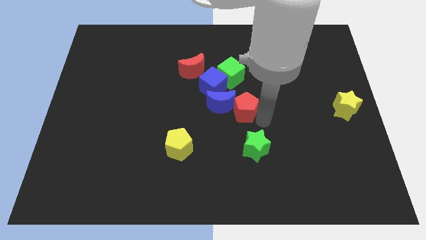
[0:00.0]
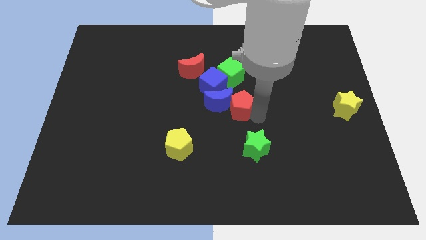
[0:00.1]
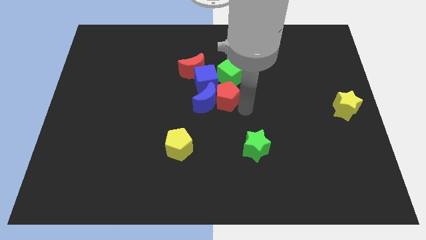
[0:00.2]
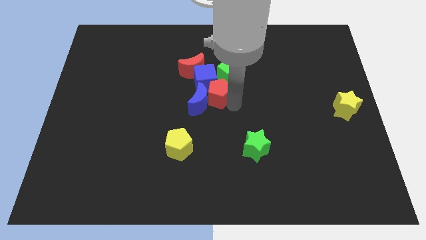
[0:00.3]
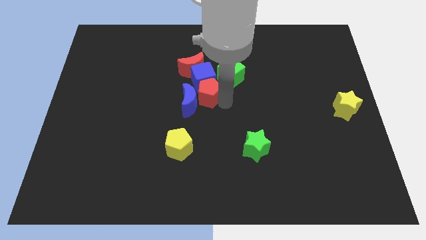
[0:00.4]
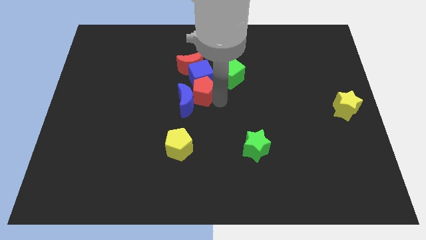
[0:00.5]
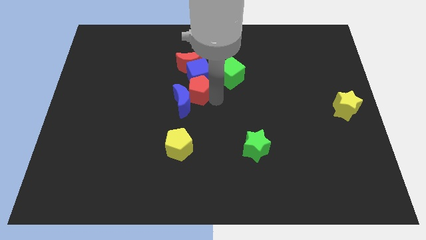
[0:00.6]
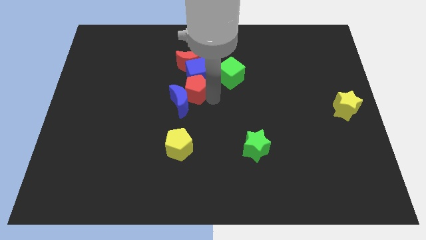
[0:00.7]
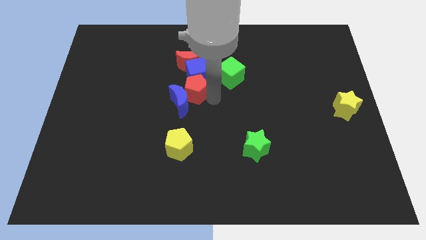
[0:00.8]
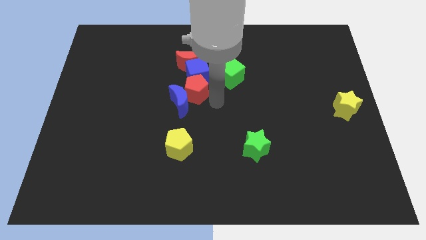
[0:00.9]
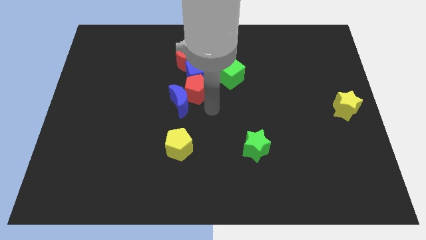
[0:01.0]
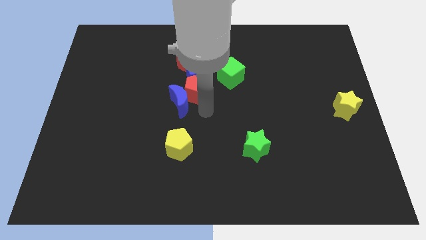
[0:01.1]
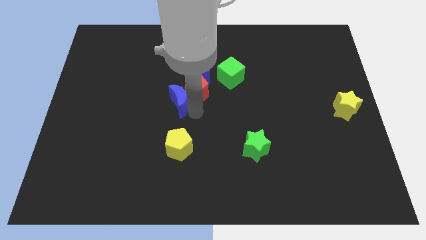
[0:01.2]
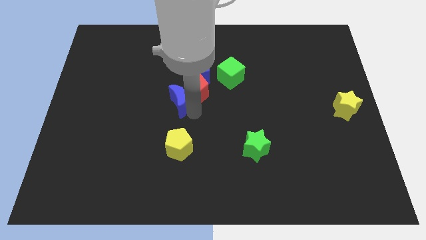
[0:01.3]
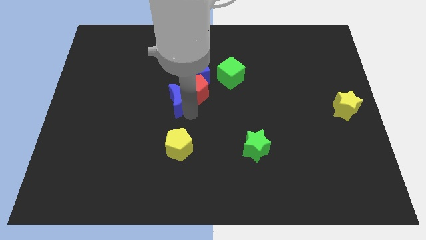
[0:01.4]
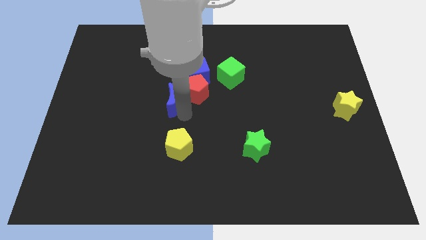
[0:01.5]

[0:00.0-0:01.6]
place the red pentagon to the right of the blue crescent

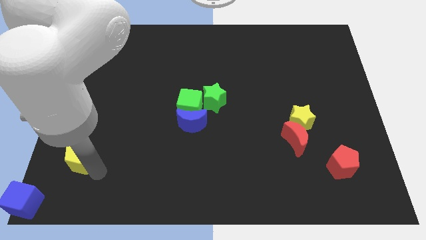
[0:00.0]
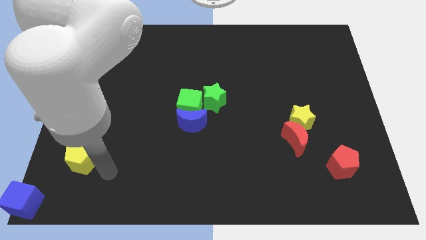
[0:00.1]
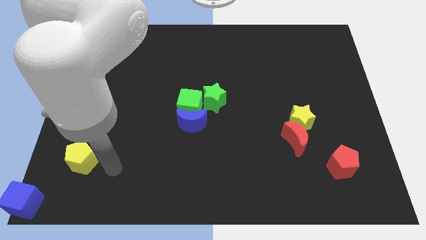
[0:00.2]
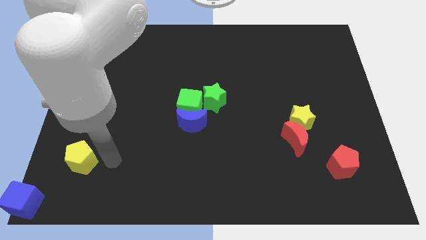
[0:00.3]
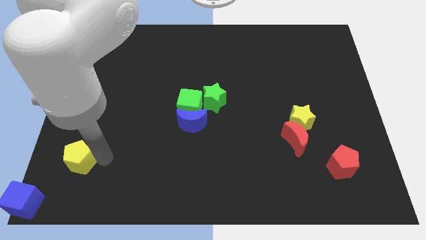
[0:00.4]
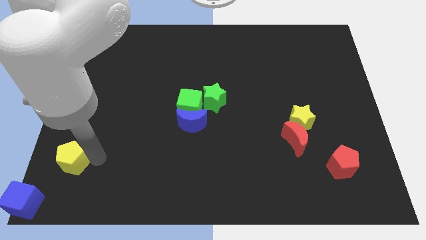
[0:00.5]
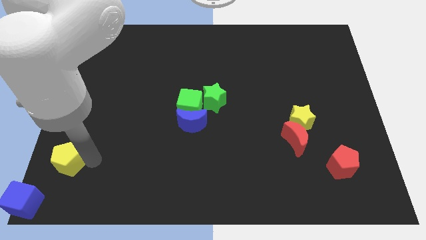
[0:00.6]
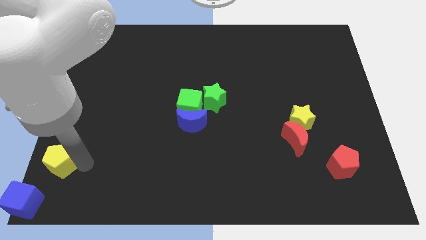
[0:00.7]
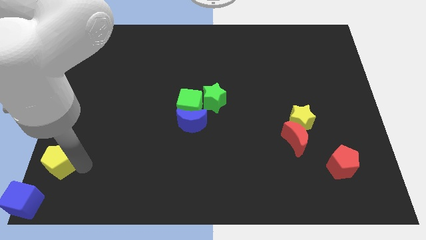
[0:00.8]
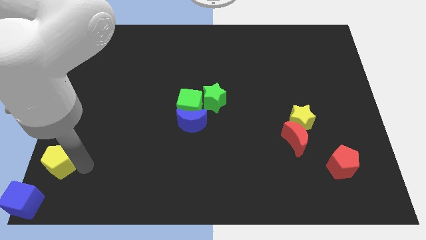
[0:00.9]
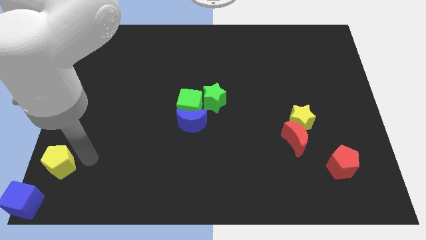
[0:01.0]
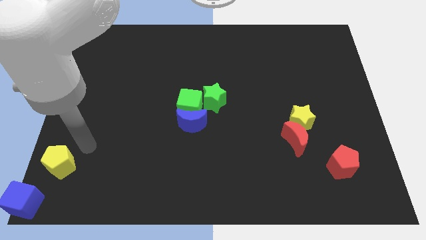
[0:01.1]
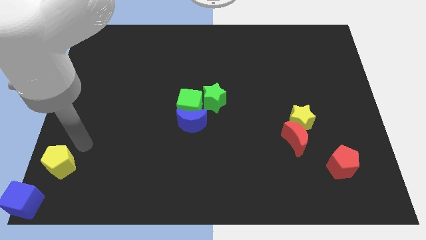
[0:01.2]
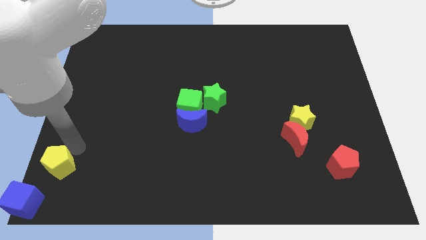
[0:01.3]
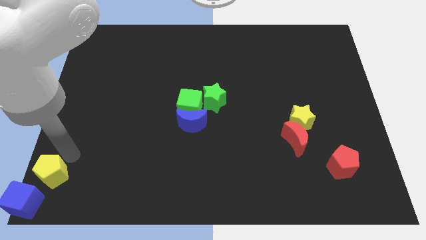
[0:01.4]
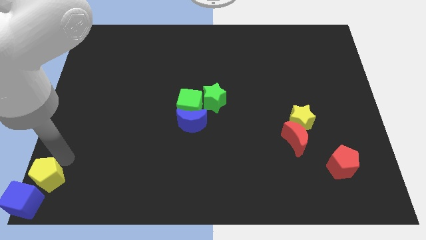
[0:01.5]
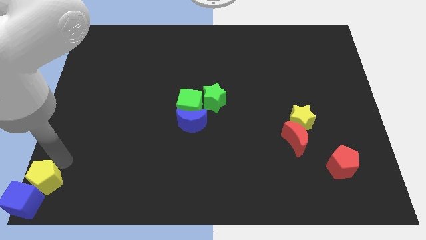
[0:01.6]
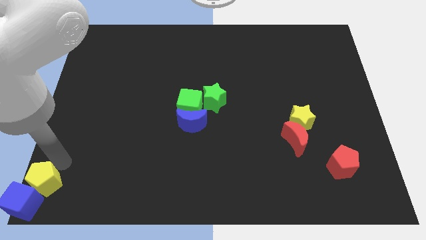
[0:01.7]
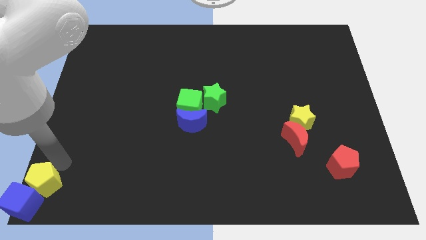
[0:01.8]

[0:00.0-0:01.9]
place yellow pentagon near to blue cube

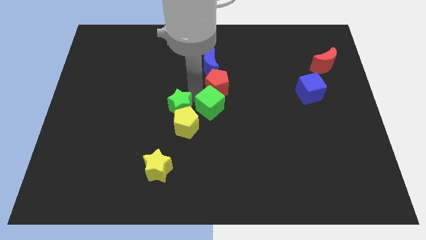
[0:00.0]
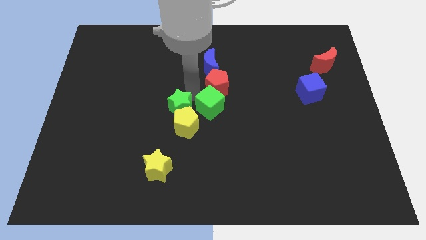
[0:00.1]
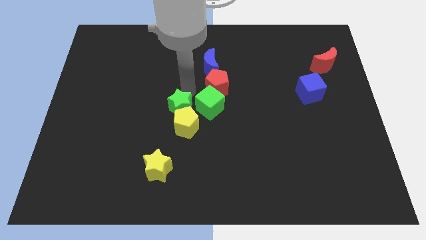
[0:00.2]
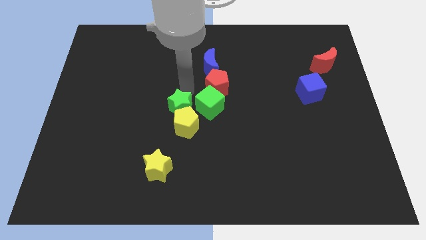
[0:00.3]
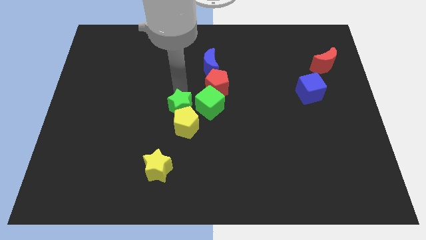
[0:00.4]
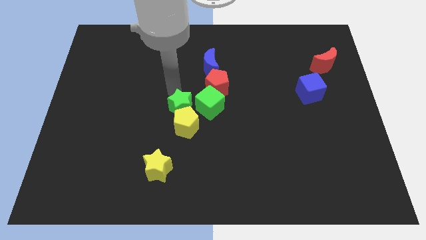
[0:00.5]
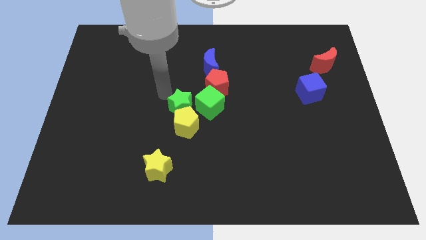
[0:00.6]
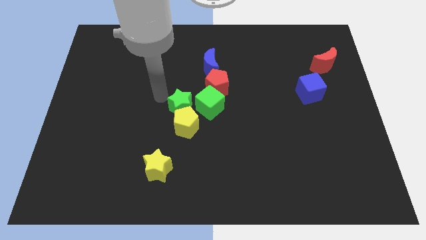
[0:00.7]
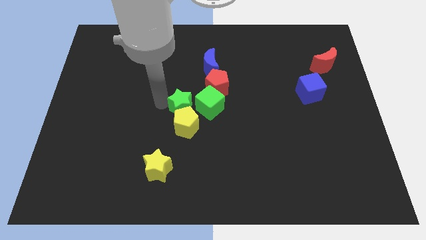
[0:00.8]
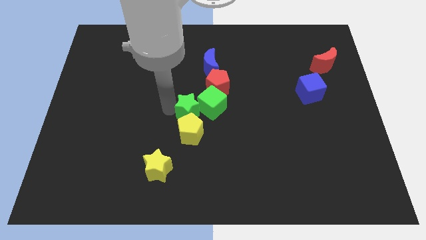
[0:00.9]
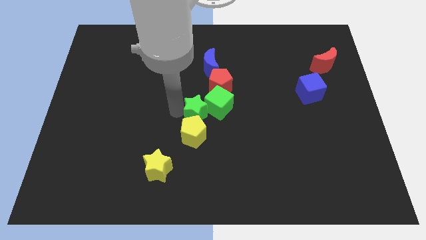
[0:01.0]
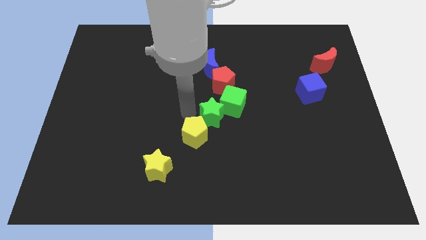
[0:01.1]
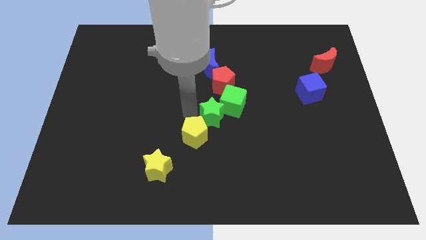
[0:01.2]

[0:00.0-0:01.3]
place green star in between green cube and yellow pentagon

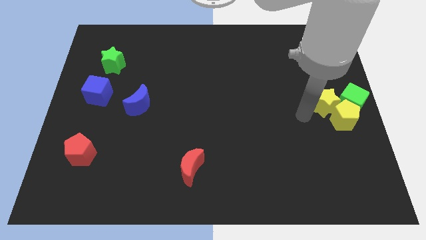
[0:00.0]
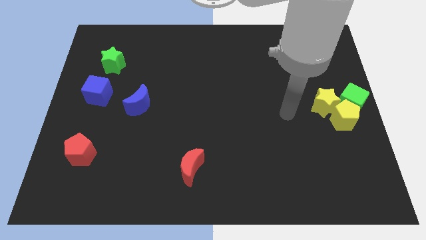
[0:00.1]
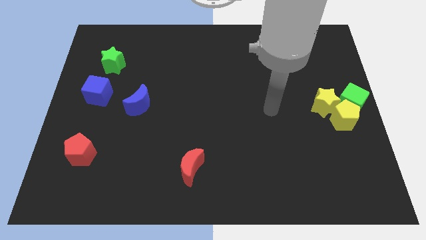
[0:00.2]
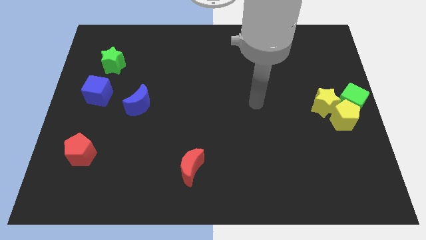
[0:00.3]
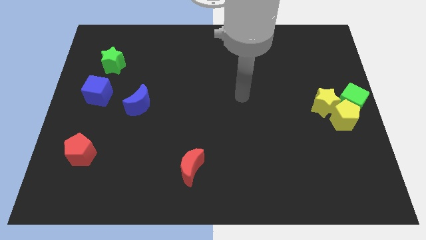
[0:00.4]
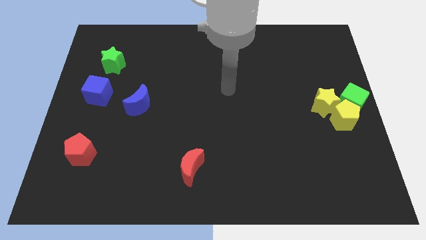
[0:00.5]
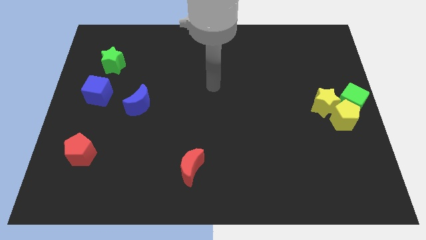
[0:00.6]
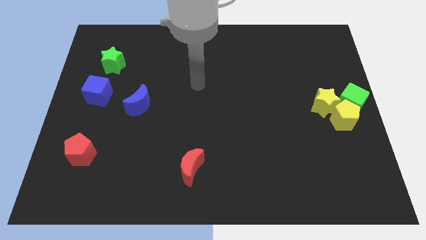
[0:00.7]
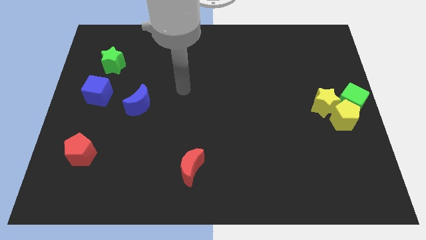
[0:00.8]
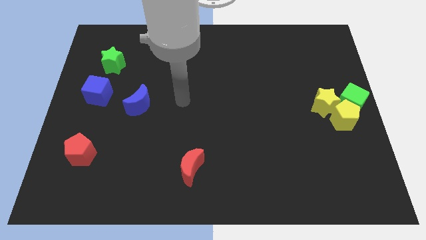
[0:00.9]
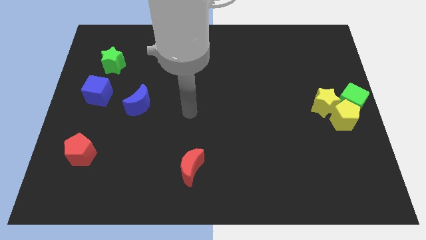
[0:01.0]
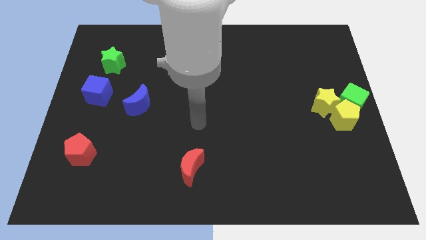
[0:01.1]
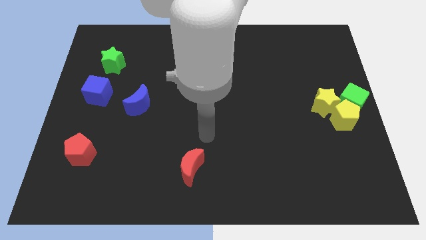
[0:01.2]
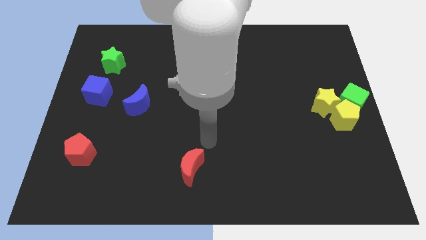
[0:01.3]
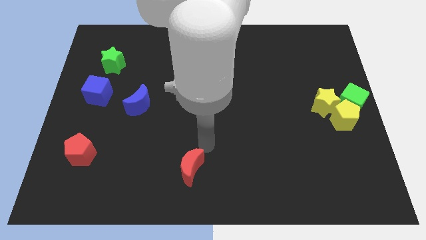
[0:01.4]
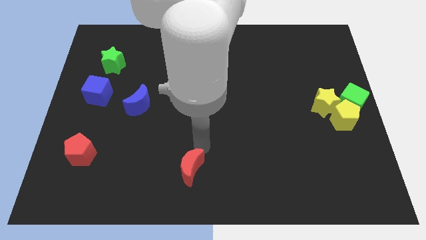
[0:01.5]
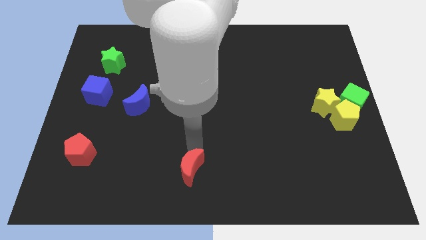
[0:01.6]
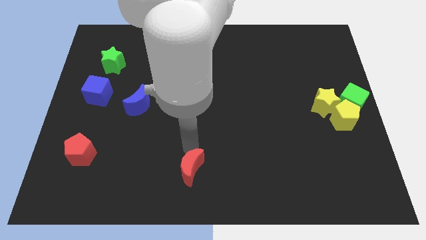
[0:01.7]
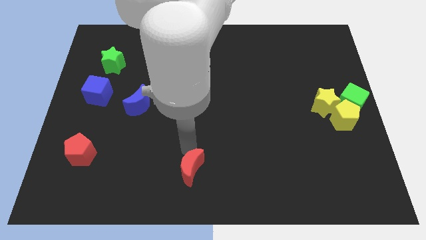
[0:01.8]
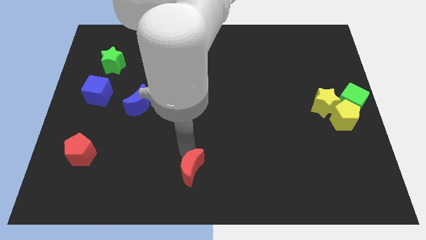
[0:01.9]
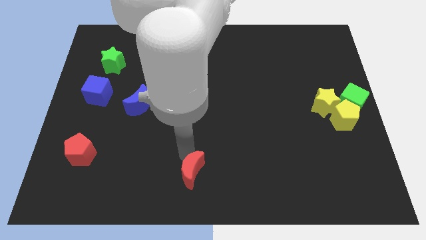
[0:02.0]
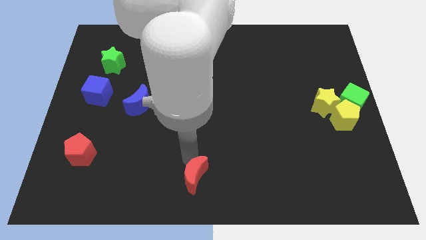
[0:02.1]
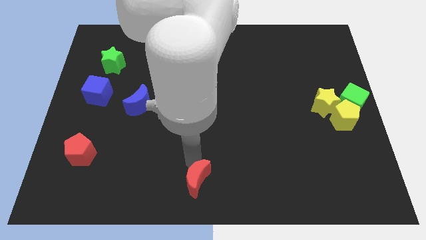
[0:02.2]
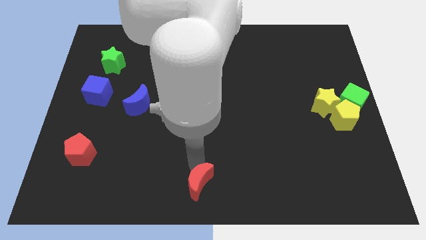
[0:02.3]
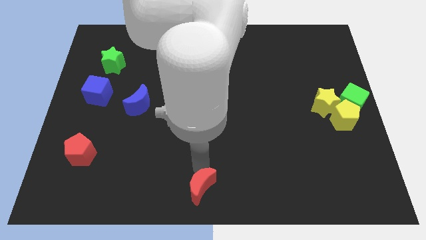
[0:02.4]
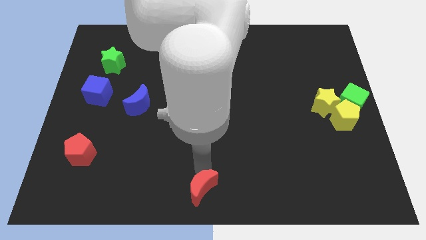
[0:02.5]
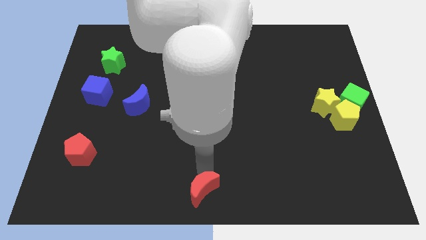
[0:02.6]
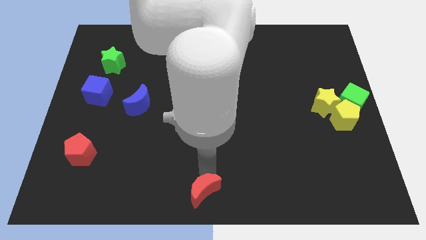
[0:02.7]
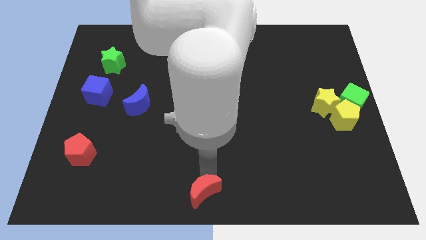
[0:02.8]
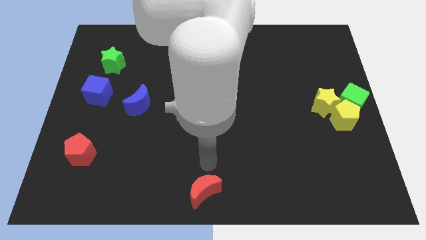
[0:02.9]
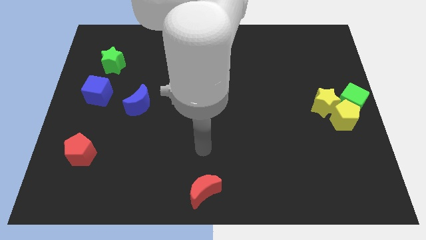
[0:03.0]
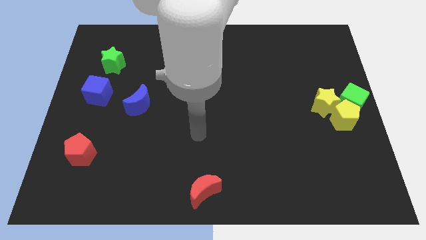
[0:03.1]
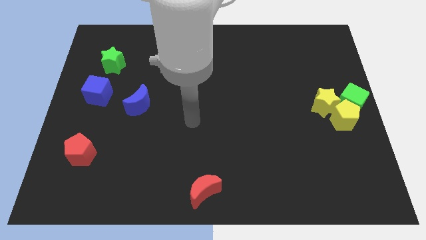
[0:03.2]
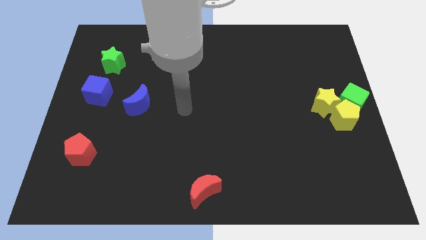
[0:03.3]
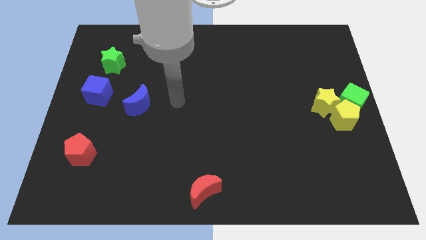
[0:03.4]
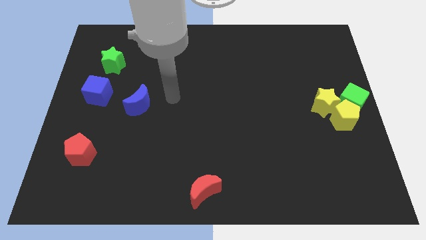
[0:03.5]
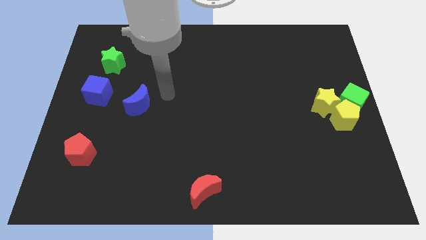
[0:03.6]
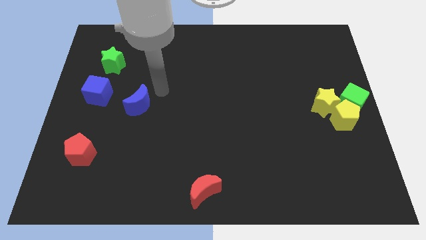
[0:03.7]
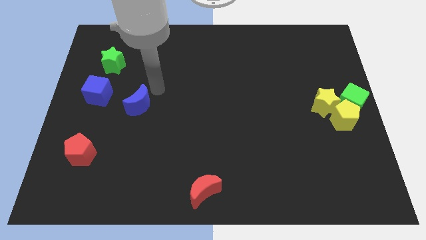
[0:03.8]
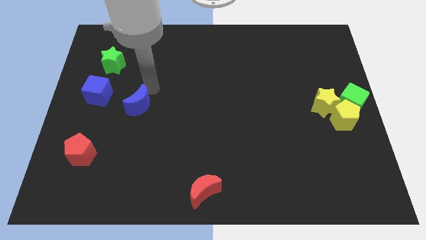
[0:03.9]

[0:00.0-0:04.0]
push the red moon downward

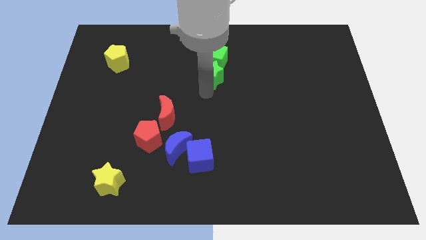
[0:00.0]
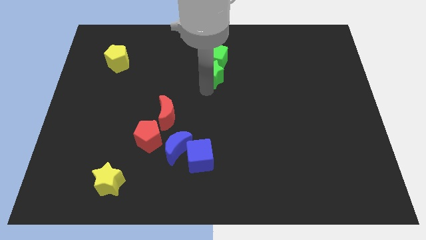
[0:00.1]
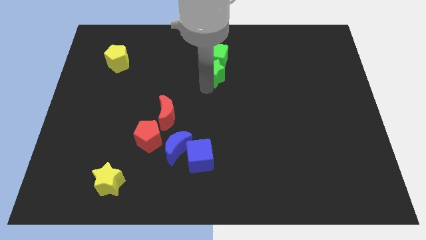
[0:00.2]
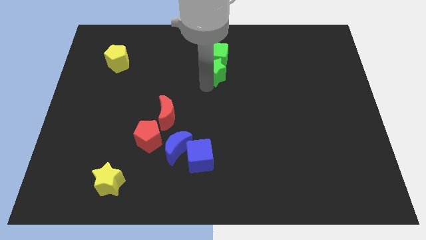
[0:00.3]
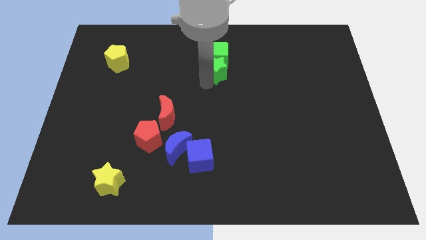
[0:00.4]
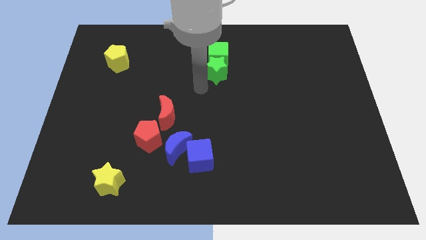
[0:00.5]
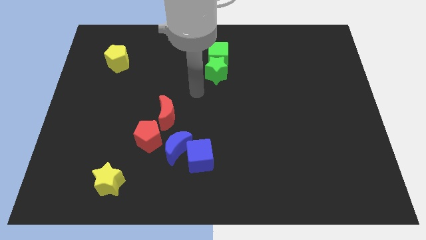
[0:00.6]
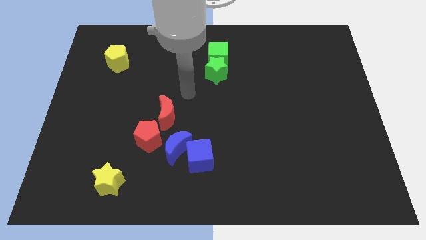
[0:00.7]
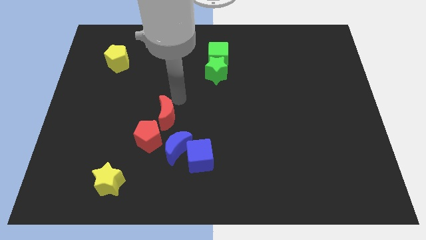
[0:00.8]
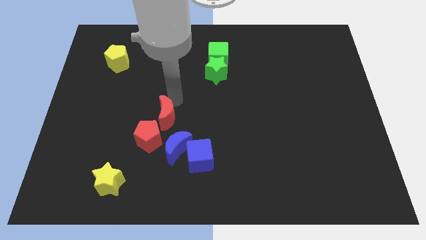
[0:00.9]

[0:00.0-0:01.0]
move the green star into the green cube
